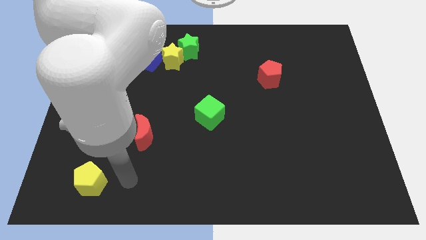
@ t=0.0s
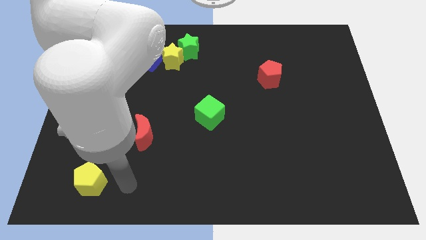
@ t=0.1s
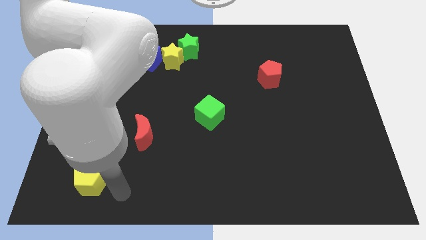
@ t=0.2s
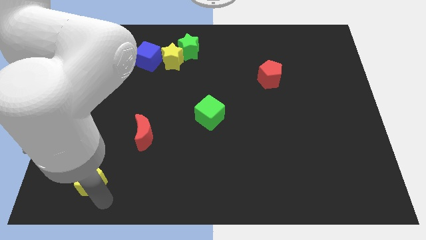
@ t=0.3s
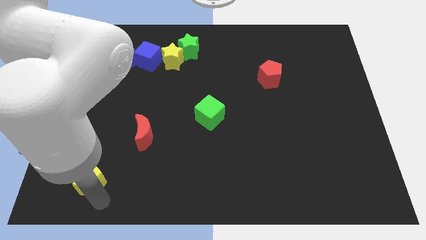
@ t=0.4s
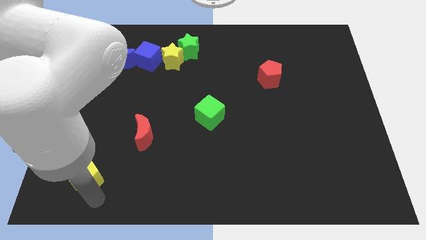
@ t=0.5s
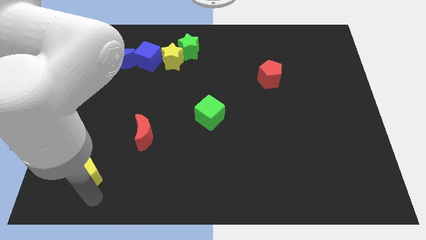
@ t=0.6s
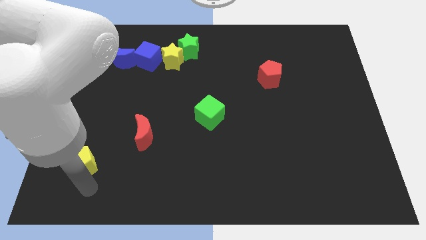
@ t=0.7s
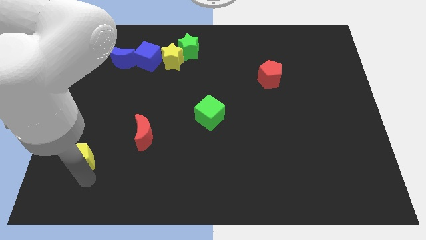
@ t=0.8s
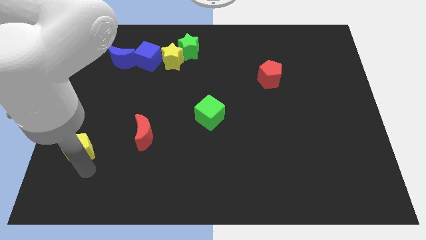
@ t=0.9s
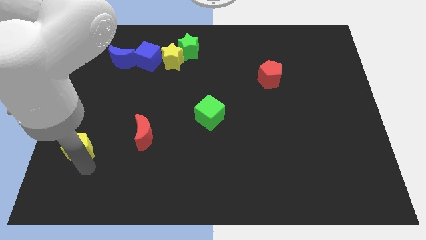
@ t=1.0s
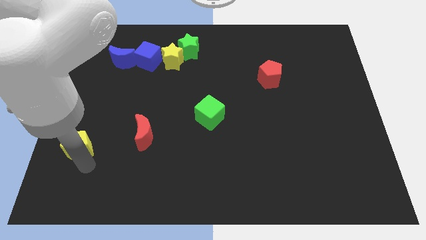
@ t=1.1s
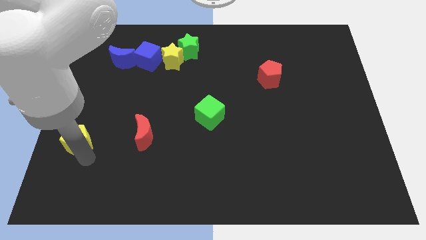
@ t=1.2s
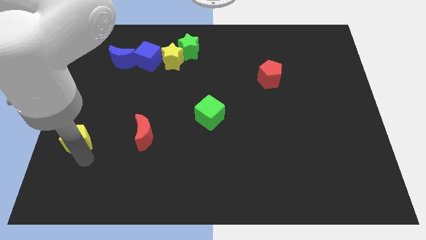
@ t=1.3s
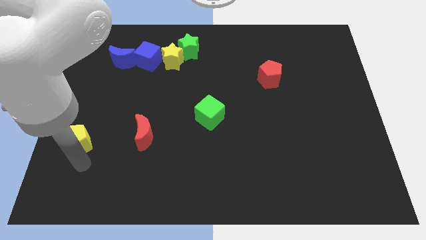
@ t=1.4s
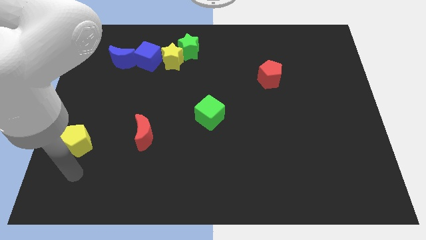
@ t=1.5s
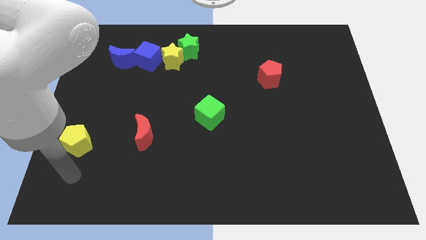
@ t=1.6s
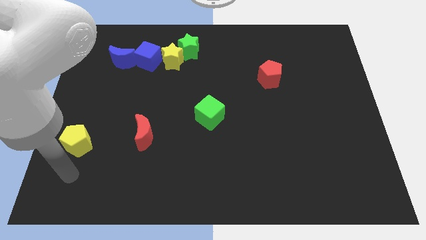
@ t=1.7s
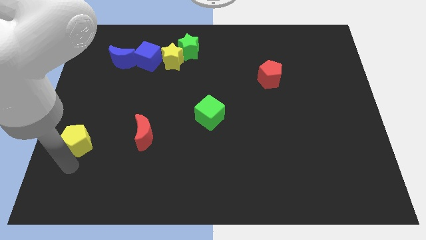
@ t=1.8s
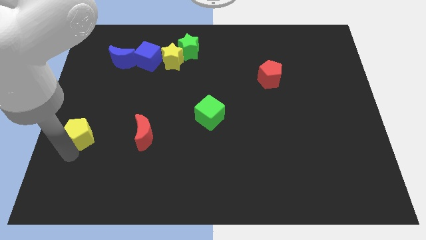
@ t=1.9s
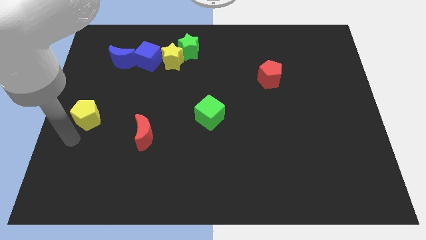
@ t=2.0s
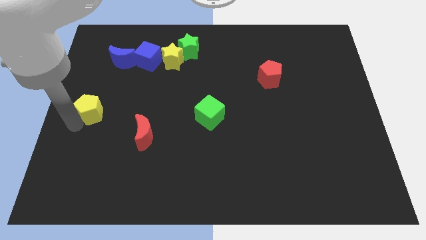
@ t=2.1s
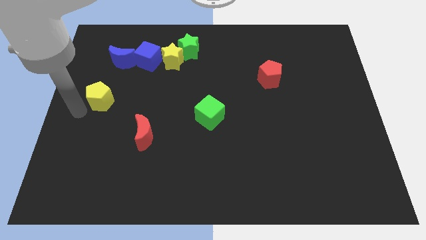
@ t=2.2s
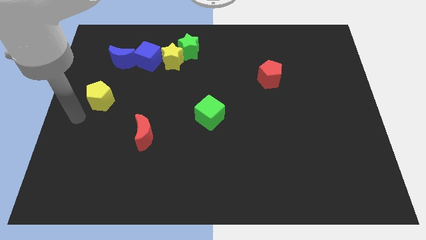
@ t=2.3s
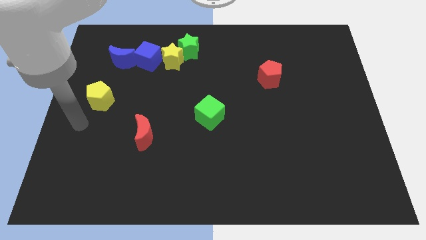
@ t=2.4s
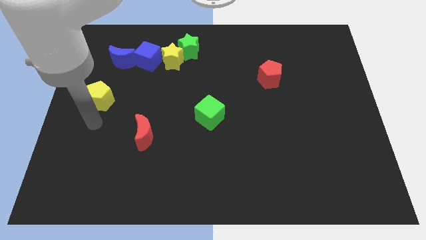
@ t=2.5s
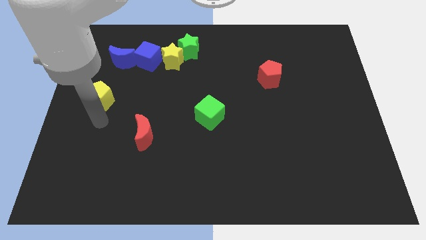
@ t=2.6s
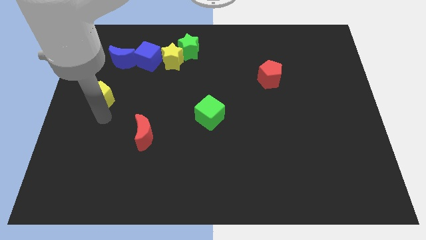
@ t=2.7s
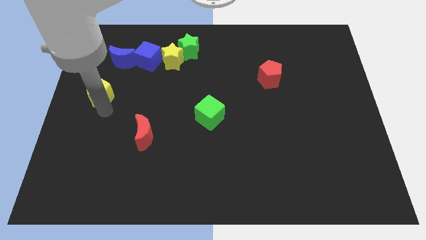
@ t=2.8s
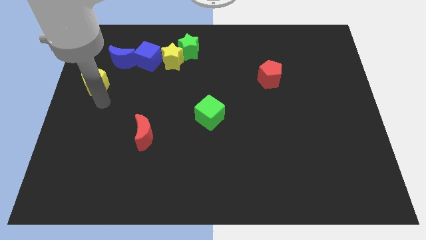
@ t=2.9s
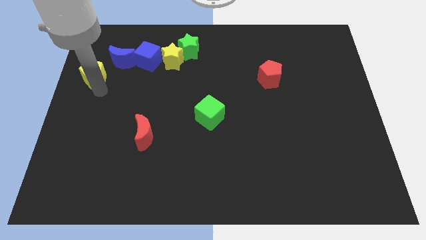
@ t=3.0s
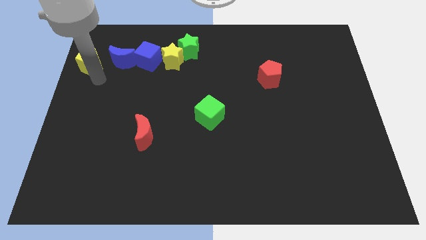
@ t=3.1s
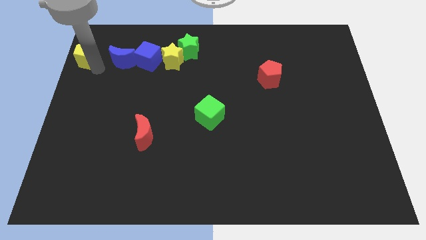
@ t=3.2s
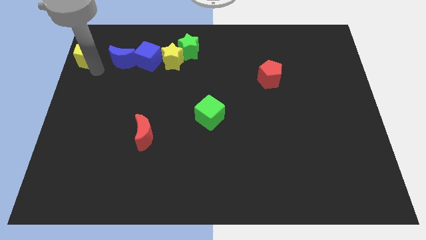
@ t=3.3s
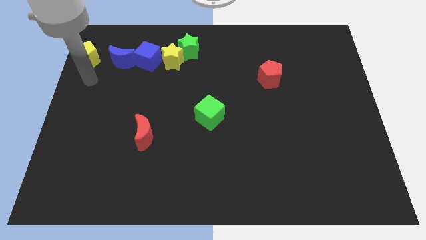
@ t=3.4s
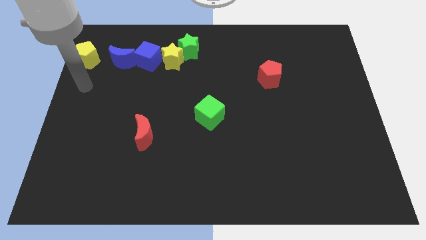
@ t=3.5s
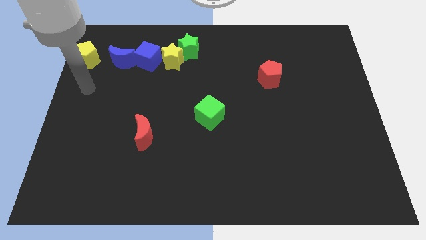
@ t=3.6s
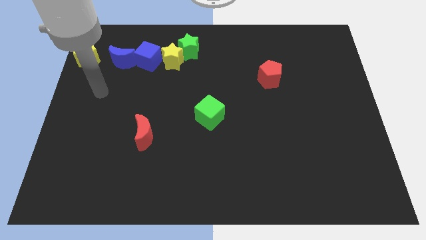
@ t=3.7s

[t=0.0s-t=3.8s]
place yellow pentagon beside blue crescent

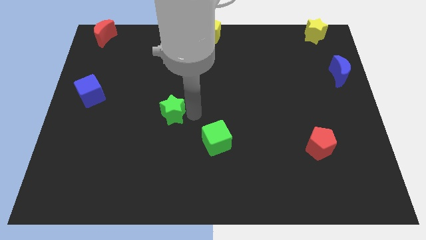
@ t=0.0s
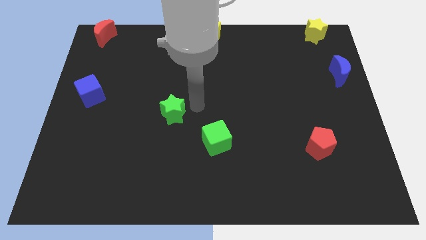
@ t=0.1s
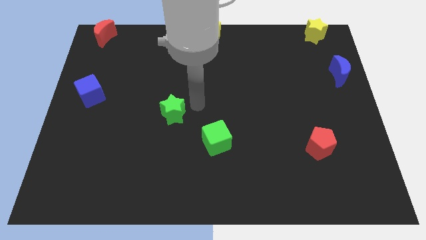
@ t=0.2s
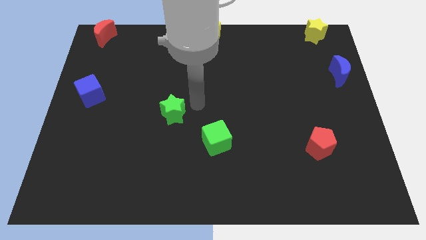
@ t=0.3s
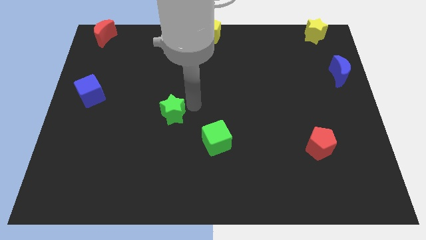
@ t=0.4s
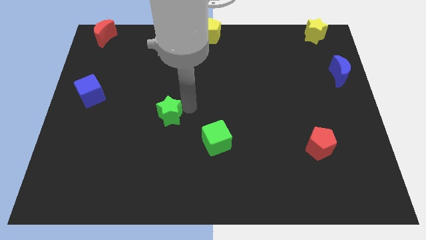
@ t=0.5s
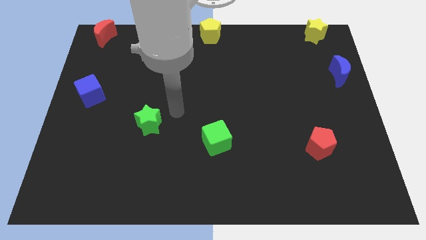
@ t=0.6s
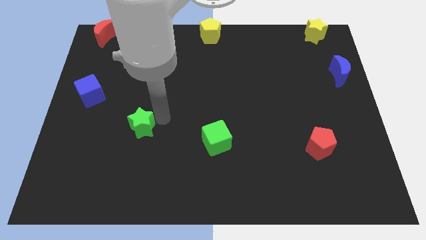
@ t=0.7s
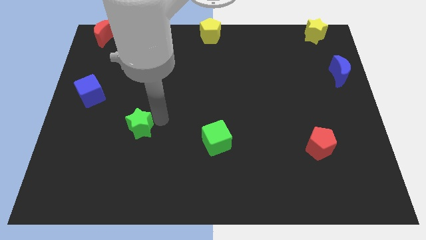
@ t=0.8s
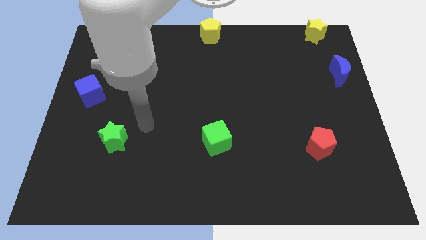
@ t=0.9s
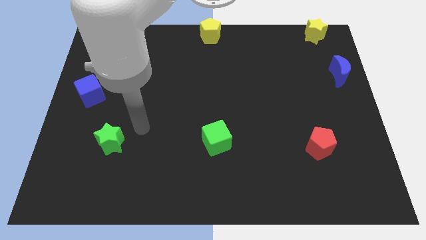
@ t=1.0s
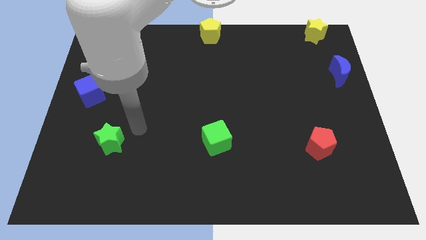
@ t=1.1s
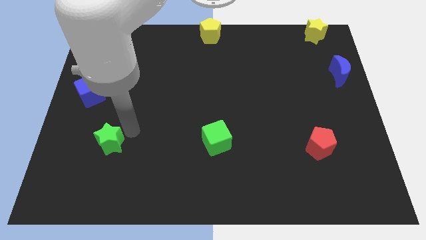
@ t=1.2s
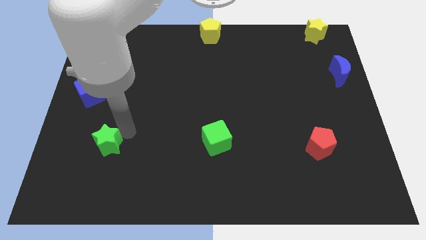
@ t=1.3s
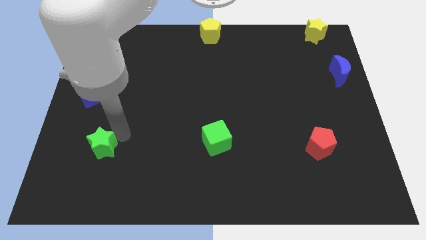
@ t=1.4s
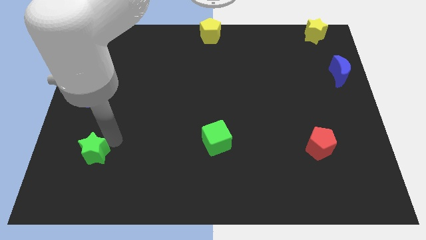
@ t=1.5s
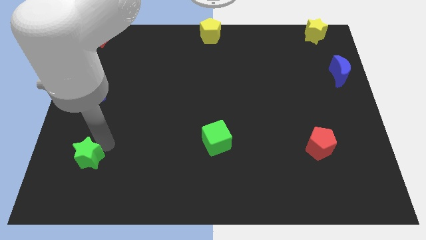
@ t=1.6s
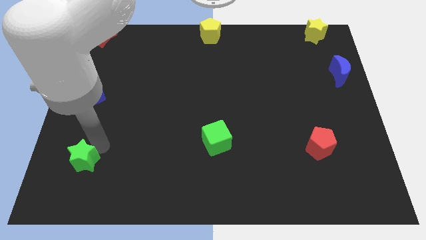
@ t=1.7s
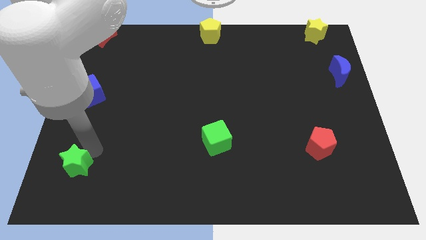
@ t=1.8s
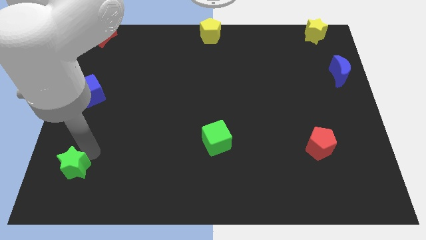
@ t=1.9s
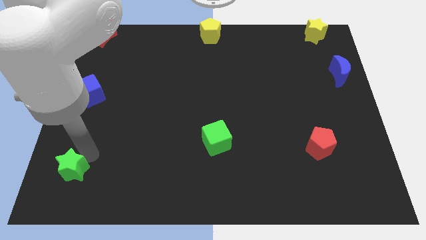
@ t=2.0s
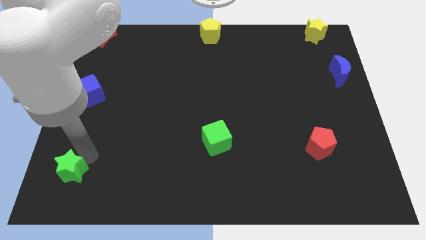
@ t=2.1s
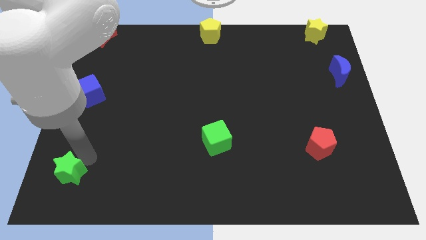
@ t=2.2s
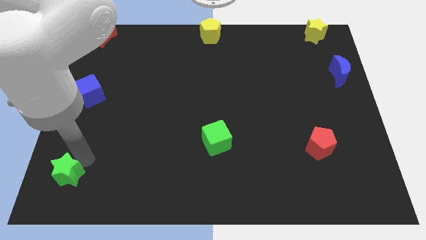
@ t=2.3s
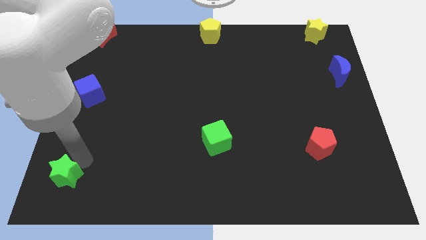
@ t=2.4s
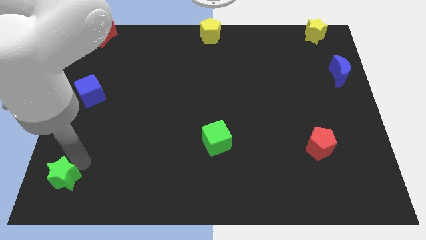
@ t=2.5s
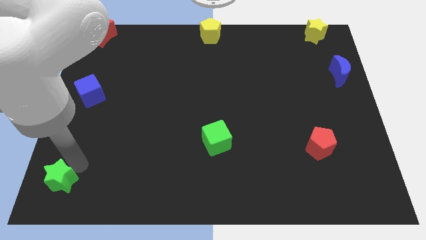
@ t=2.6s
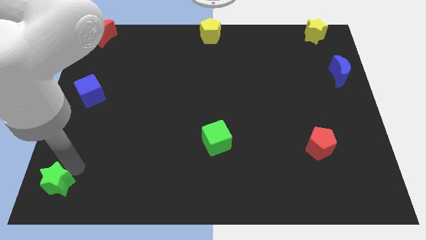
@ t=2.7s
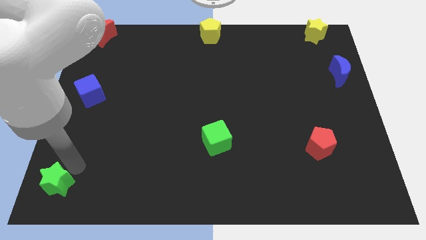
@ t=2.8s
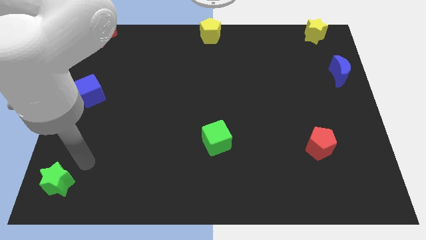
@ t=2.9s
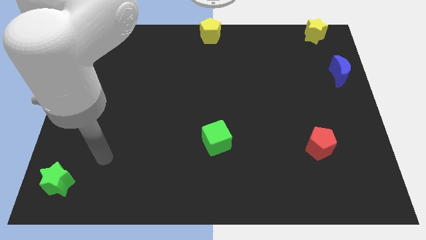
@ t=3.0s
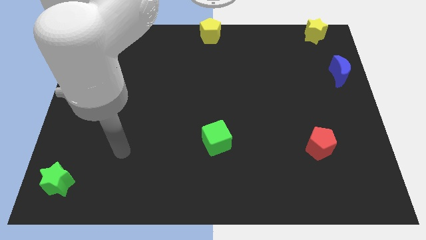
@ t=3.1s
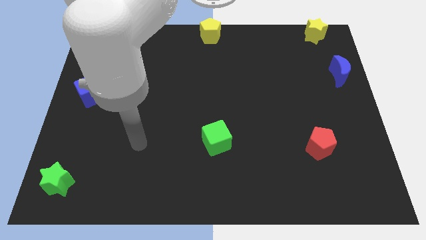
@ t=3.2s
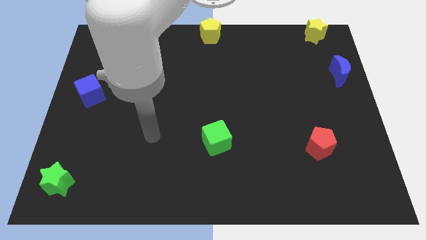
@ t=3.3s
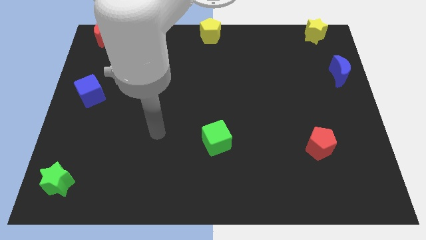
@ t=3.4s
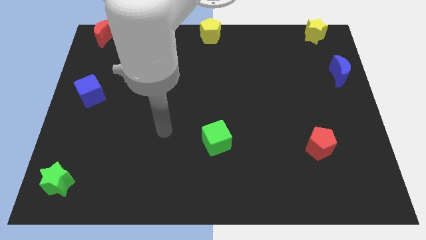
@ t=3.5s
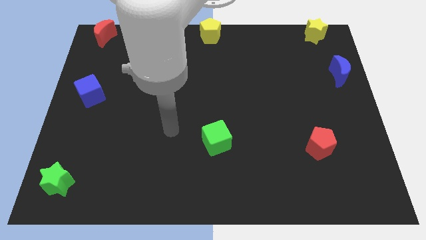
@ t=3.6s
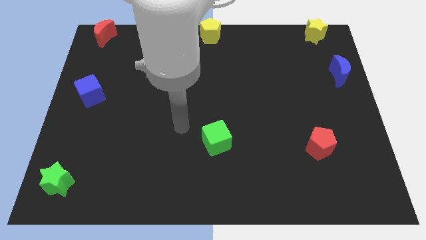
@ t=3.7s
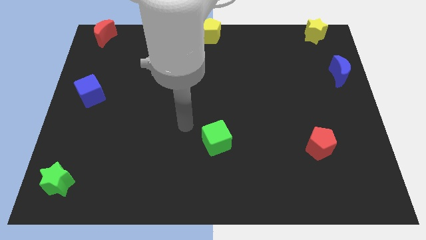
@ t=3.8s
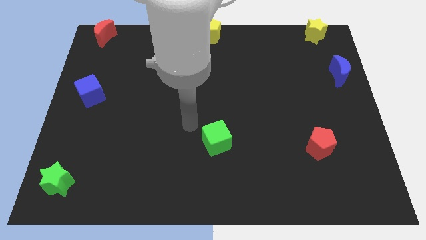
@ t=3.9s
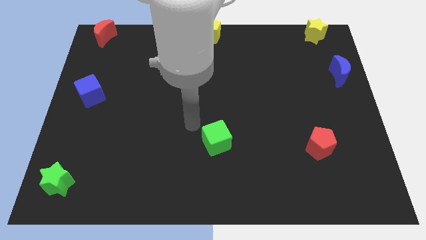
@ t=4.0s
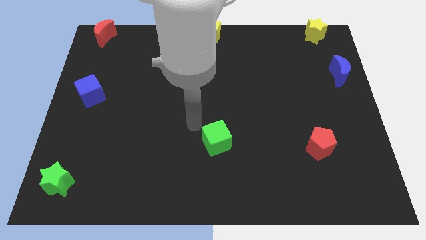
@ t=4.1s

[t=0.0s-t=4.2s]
move the green star towards the bottom left side of the board

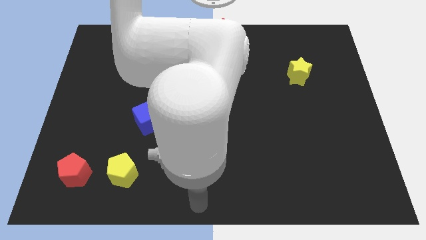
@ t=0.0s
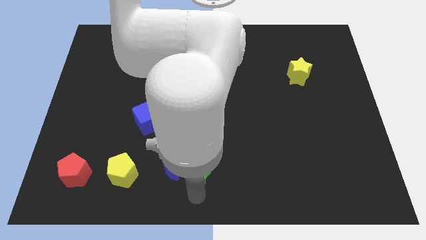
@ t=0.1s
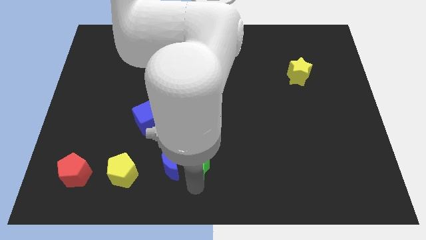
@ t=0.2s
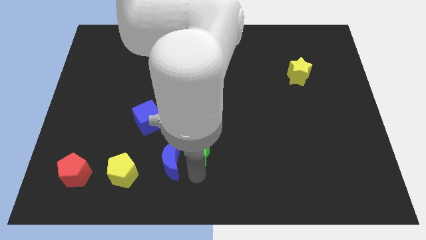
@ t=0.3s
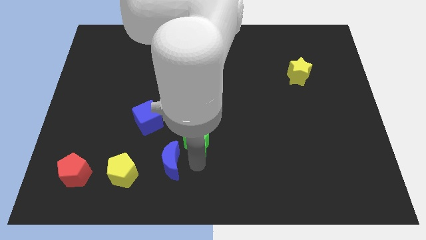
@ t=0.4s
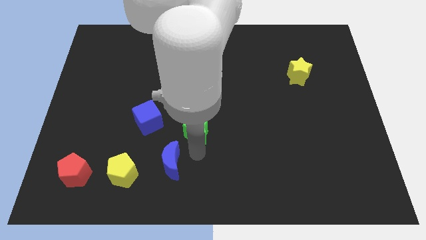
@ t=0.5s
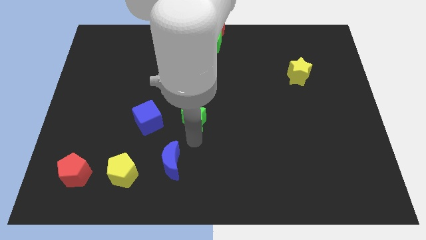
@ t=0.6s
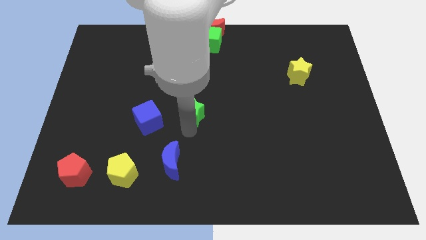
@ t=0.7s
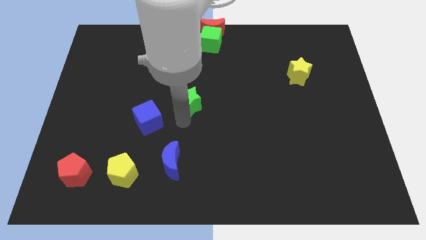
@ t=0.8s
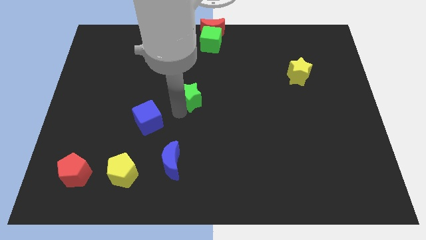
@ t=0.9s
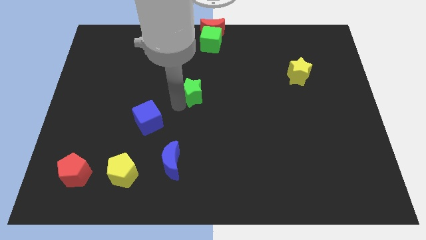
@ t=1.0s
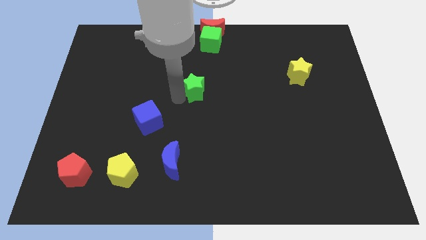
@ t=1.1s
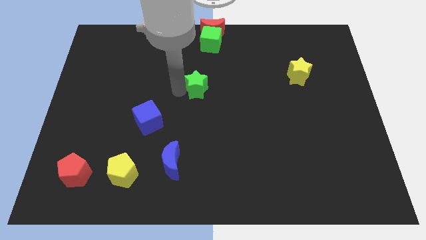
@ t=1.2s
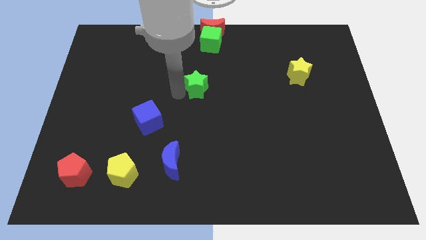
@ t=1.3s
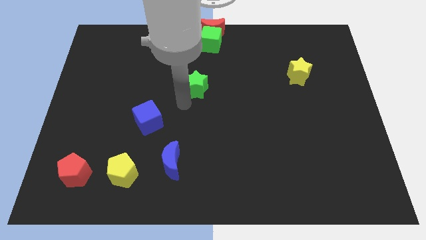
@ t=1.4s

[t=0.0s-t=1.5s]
push the green star at the top right side of the blue cube
